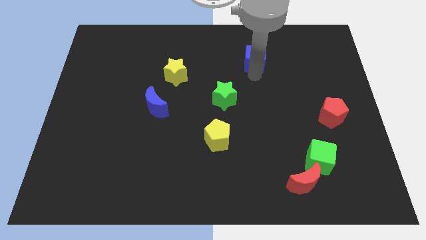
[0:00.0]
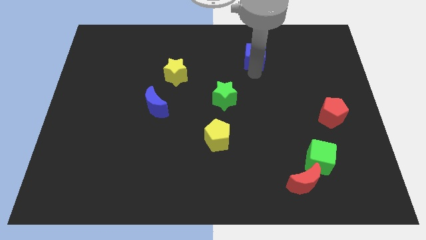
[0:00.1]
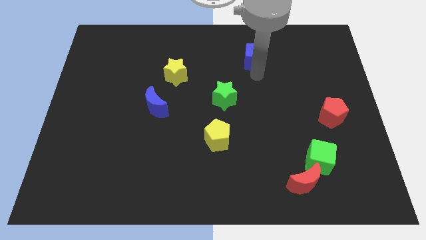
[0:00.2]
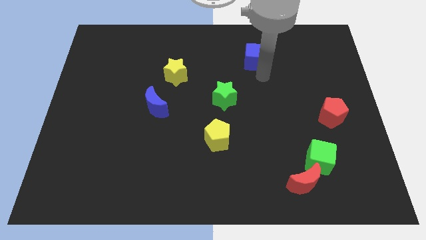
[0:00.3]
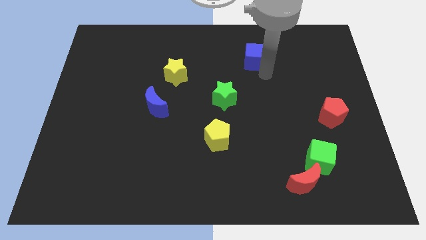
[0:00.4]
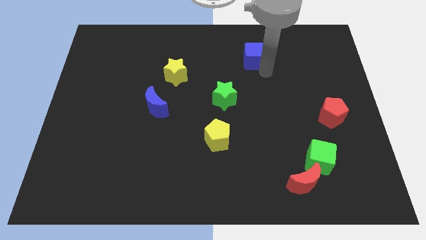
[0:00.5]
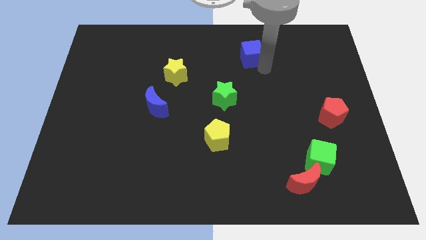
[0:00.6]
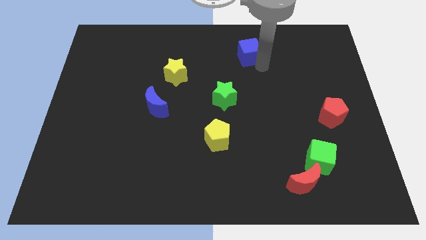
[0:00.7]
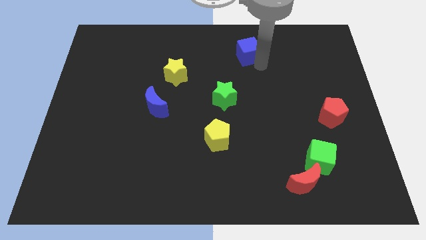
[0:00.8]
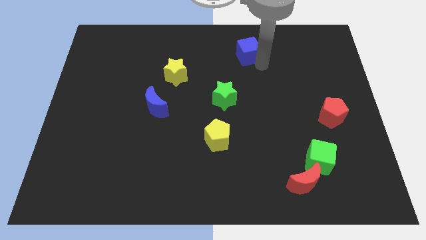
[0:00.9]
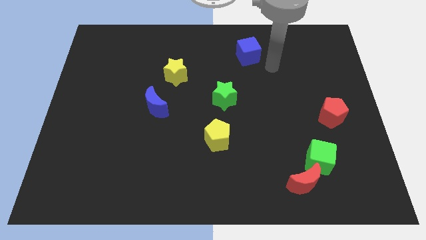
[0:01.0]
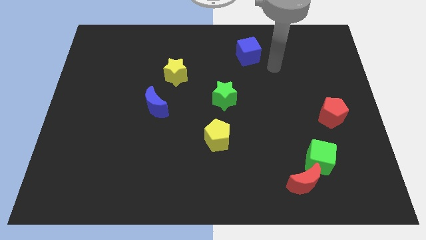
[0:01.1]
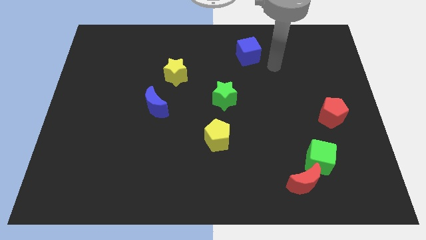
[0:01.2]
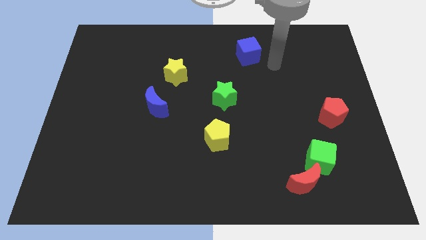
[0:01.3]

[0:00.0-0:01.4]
place blue cube to the top center of the board

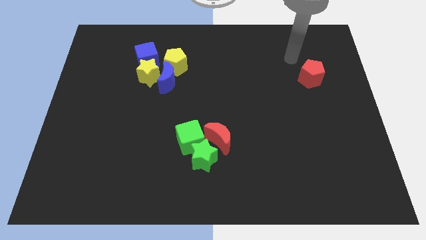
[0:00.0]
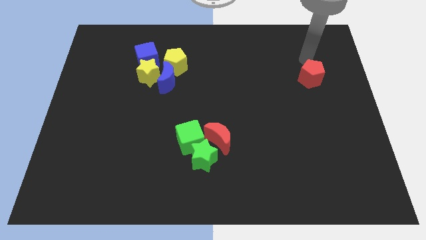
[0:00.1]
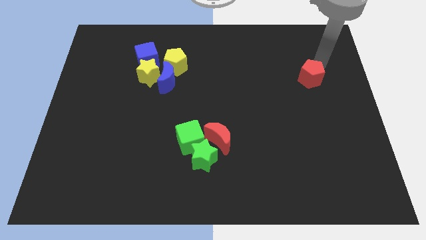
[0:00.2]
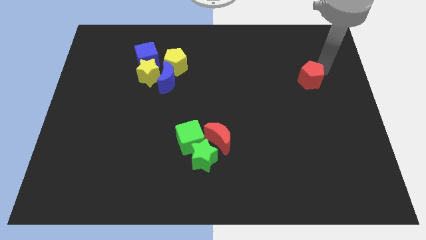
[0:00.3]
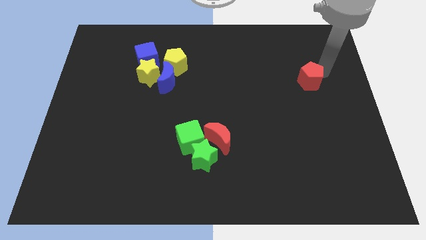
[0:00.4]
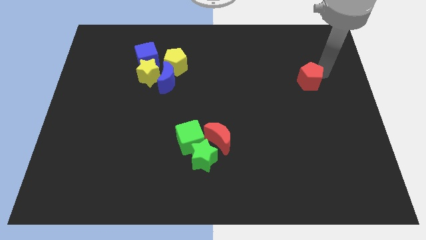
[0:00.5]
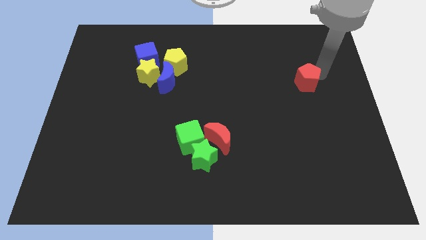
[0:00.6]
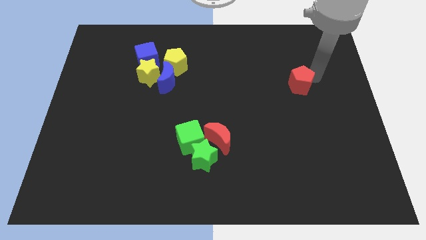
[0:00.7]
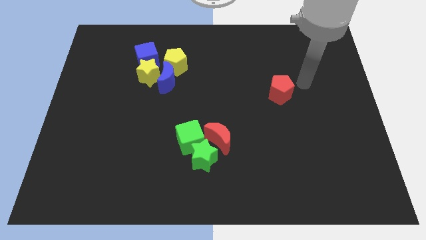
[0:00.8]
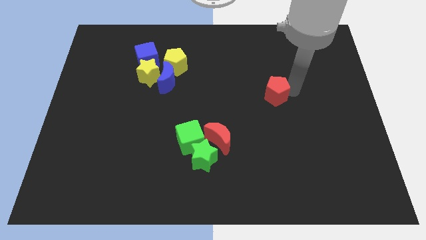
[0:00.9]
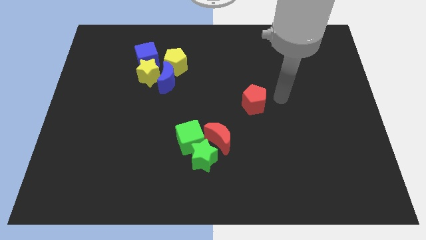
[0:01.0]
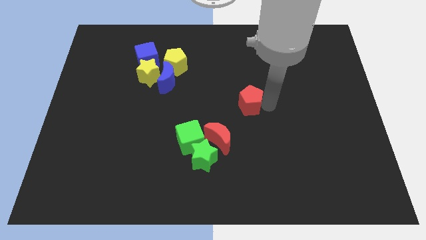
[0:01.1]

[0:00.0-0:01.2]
place the red pentagon close to the red crescent

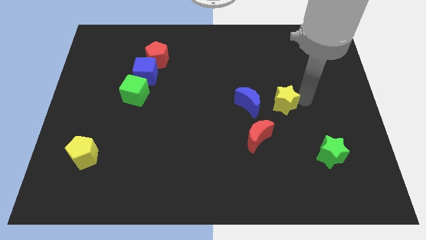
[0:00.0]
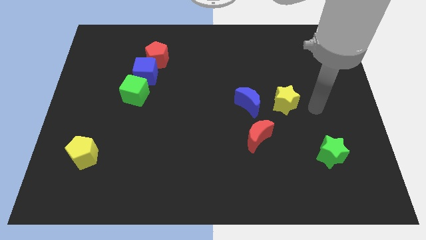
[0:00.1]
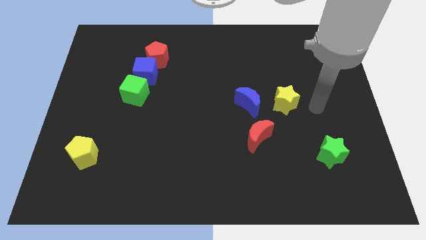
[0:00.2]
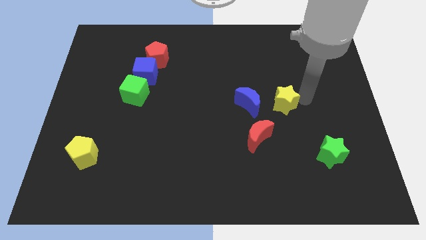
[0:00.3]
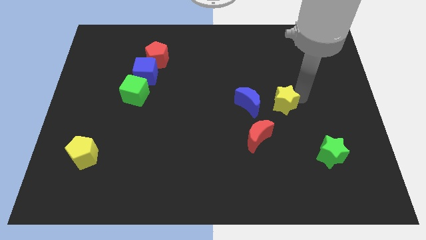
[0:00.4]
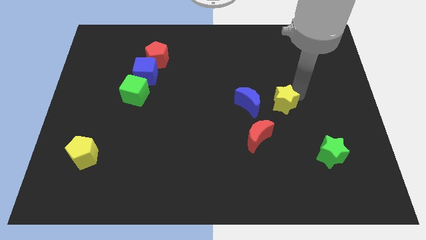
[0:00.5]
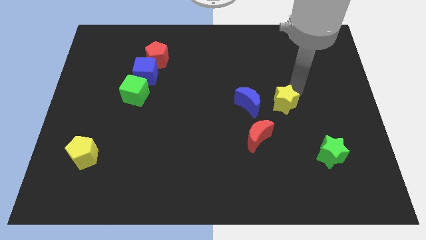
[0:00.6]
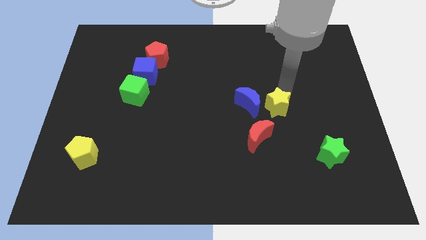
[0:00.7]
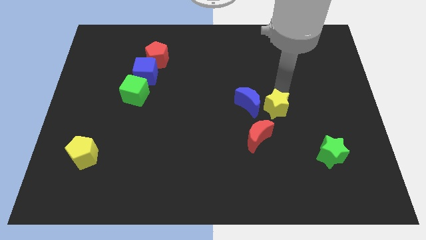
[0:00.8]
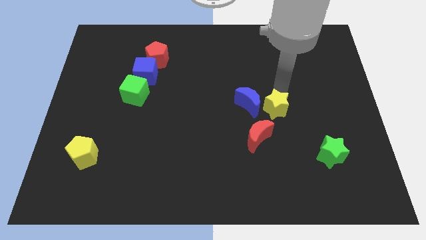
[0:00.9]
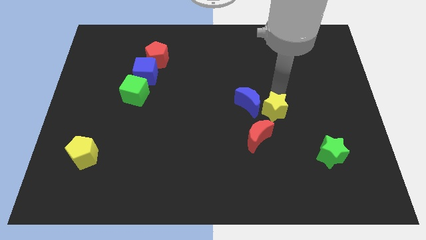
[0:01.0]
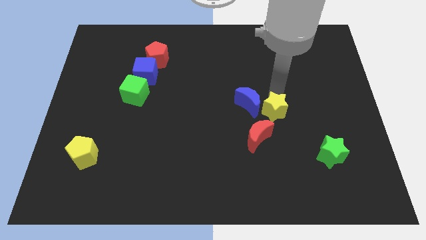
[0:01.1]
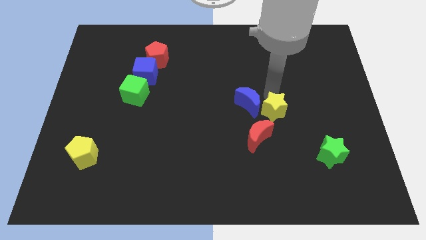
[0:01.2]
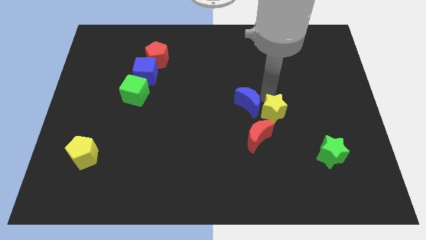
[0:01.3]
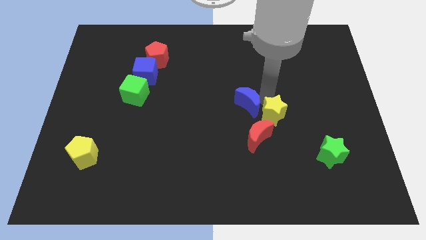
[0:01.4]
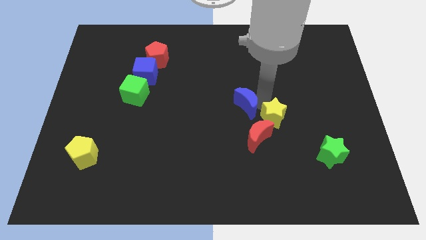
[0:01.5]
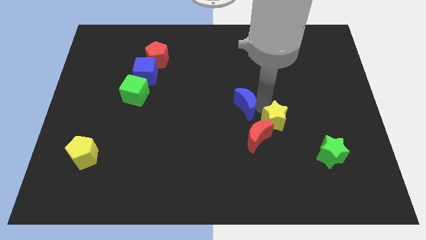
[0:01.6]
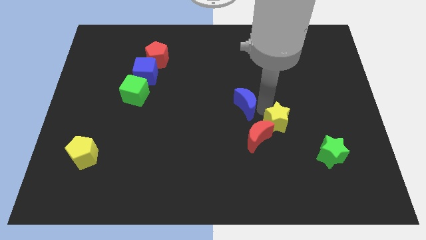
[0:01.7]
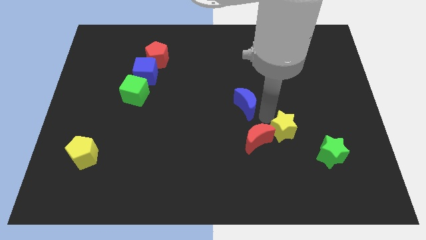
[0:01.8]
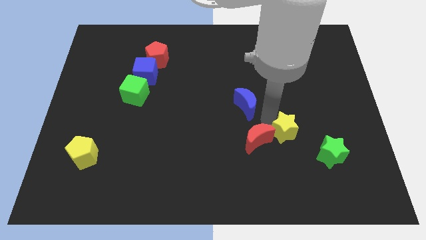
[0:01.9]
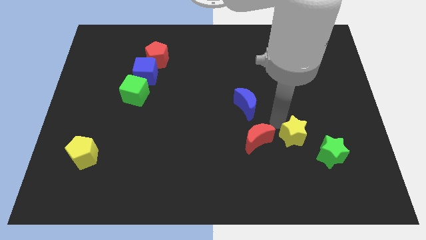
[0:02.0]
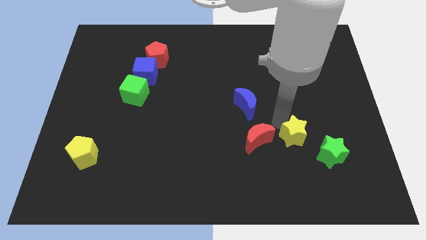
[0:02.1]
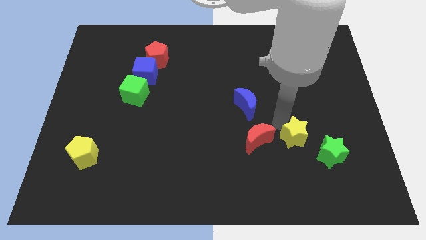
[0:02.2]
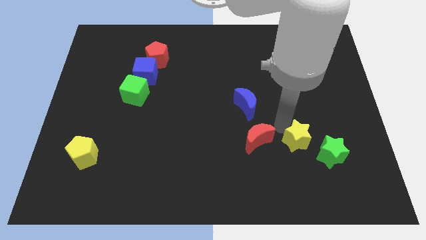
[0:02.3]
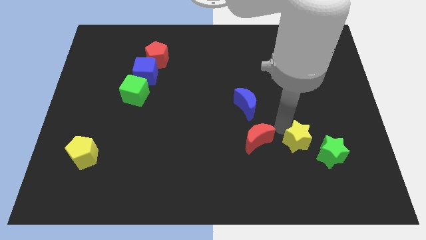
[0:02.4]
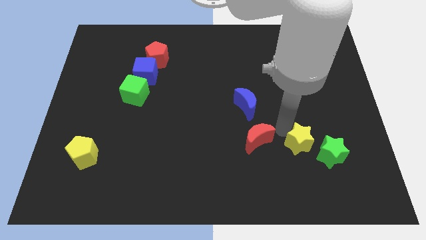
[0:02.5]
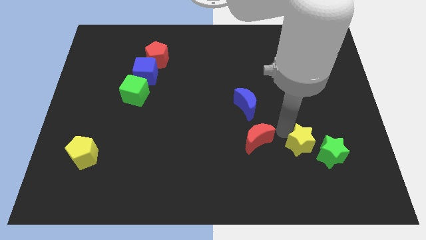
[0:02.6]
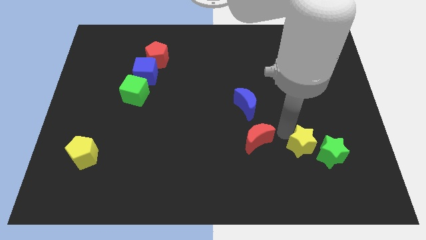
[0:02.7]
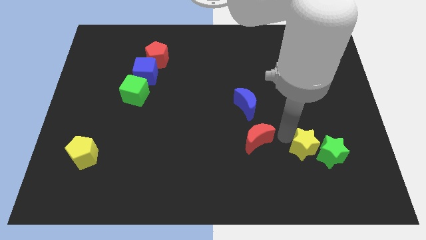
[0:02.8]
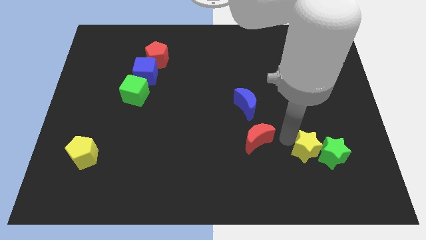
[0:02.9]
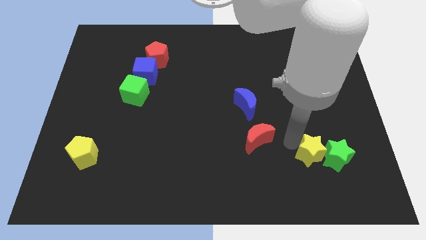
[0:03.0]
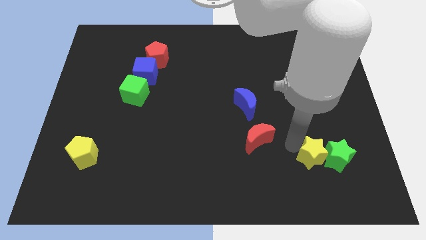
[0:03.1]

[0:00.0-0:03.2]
push yellow star into green star

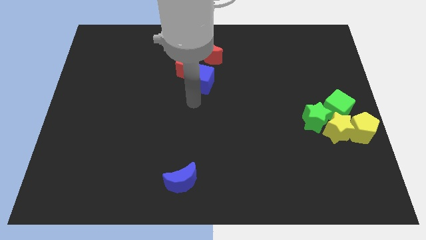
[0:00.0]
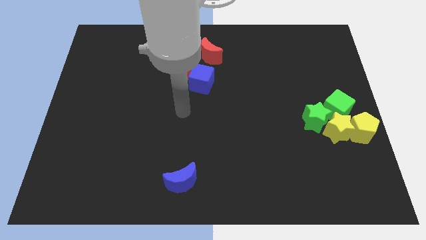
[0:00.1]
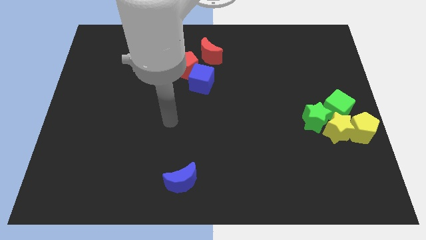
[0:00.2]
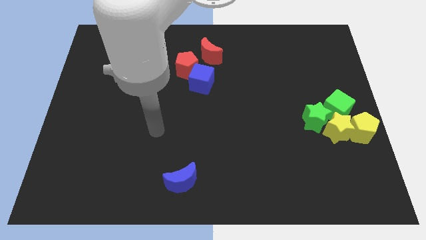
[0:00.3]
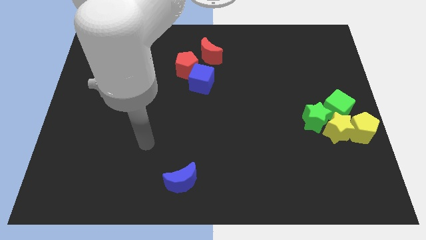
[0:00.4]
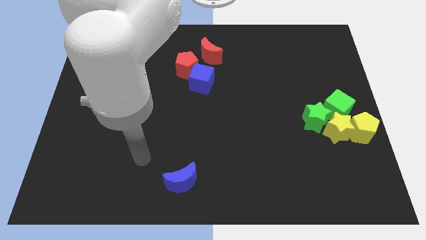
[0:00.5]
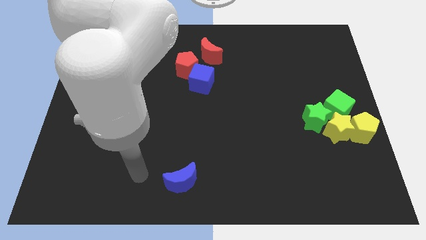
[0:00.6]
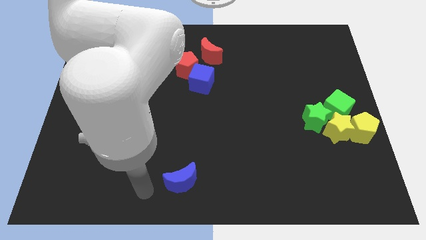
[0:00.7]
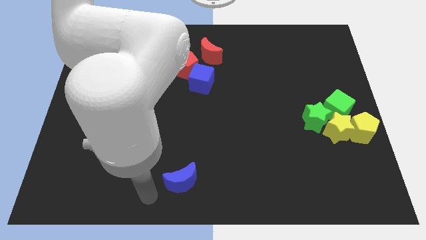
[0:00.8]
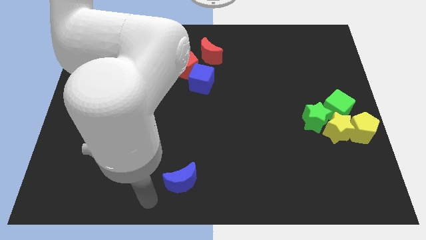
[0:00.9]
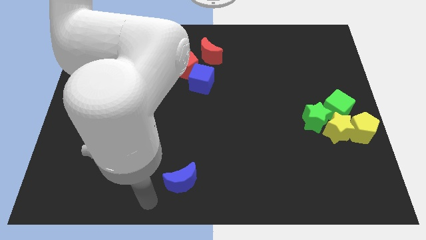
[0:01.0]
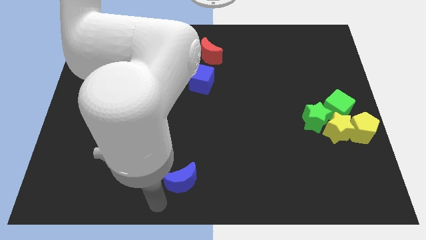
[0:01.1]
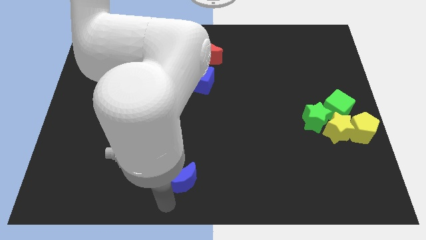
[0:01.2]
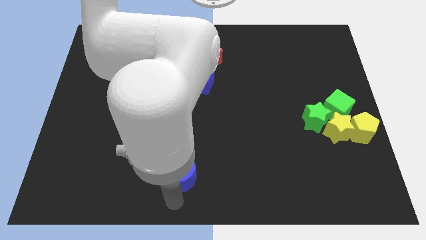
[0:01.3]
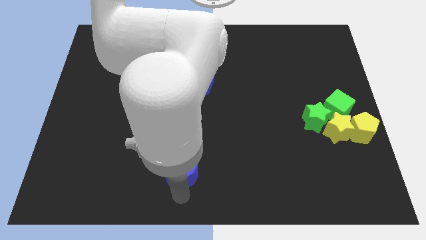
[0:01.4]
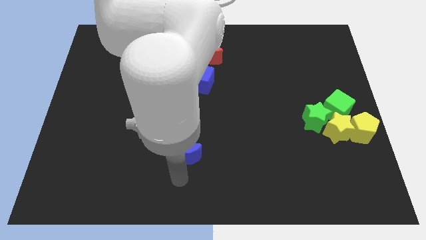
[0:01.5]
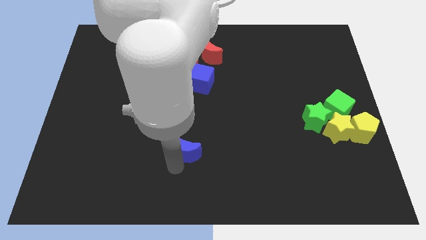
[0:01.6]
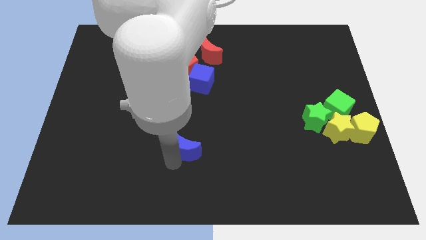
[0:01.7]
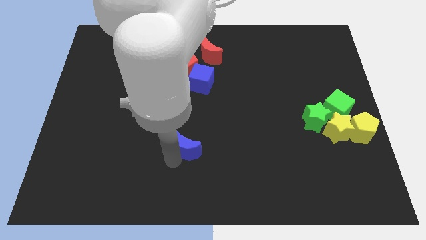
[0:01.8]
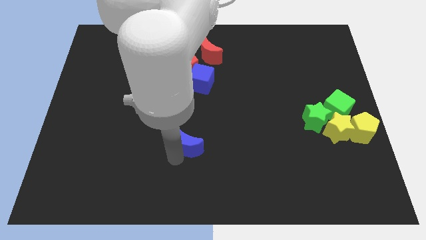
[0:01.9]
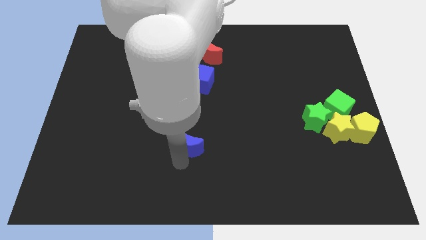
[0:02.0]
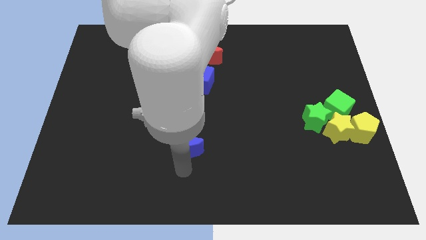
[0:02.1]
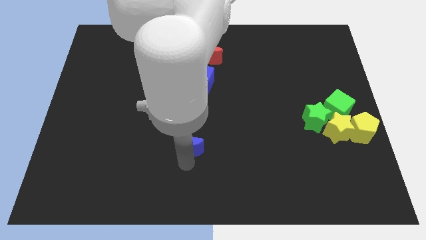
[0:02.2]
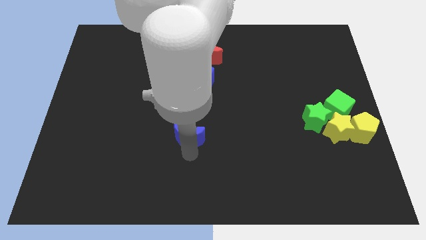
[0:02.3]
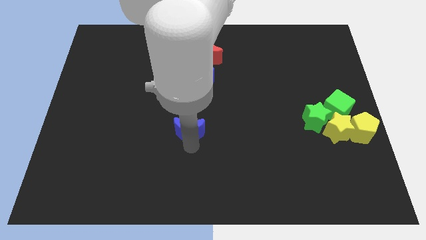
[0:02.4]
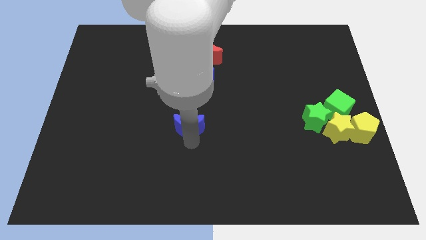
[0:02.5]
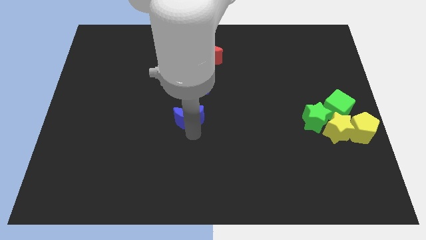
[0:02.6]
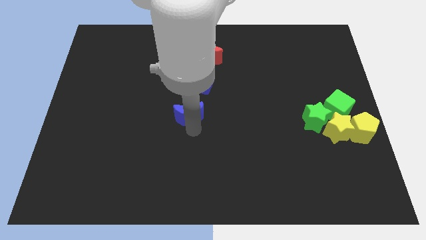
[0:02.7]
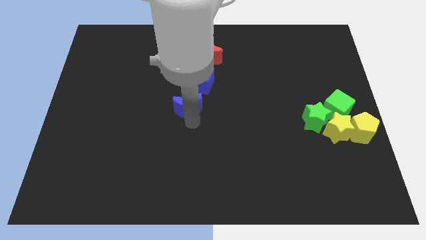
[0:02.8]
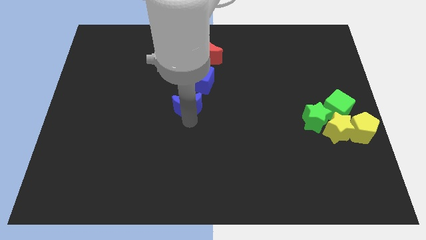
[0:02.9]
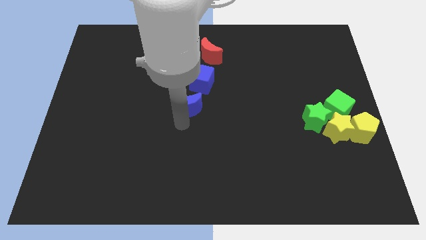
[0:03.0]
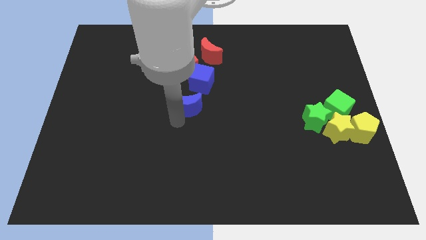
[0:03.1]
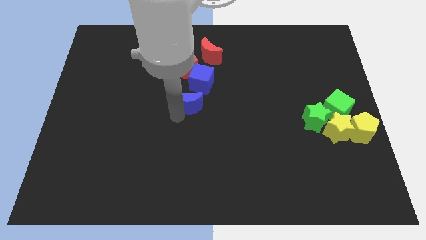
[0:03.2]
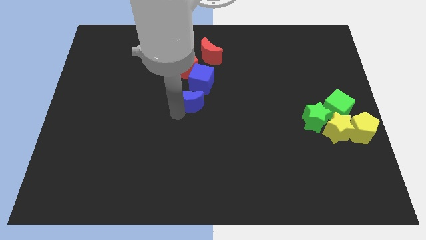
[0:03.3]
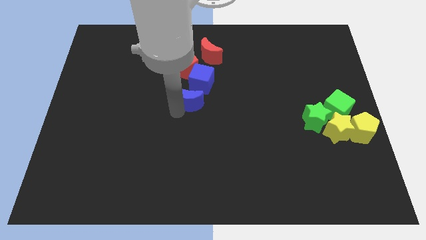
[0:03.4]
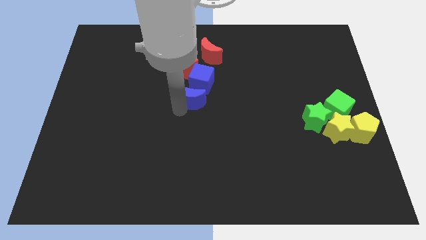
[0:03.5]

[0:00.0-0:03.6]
move the blue crescent into the blue cube
